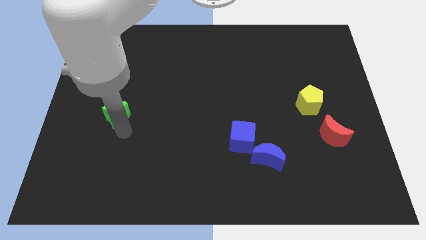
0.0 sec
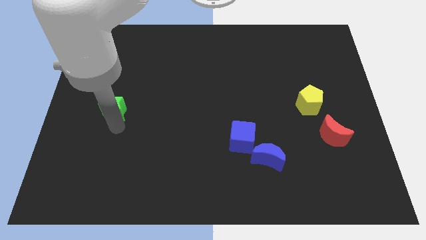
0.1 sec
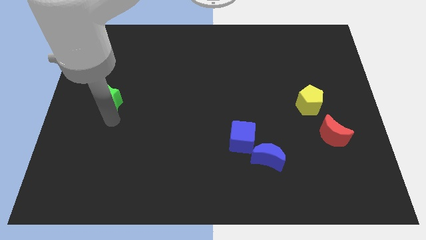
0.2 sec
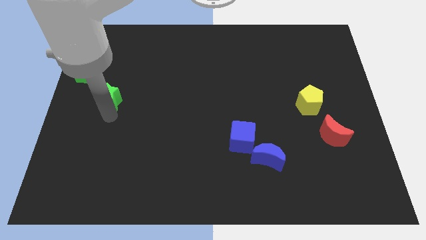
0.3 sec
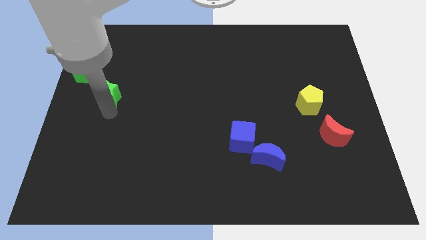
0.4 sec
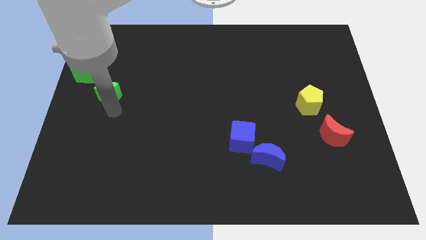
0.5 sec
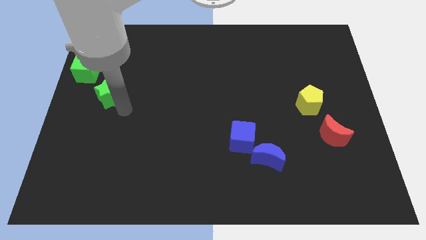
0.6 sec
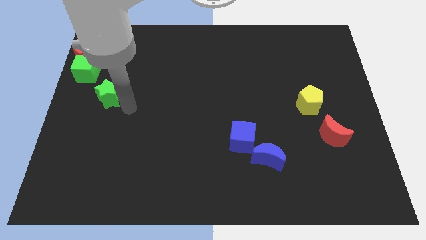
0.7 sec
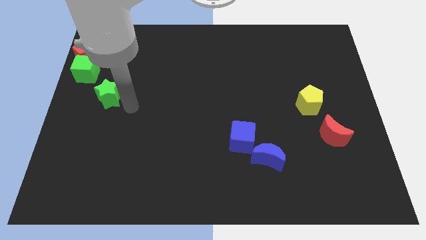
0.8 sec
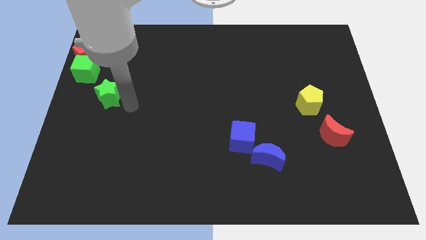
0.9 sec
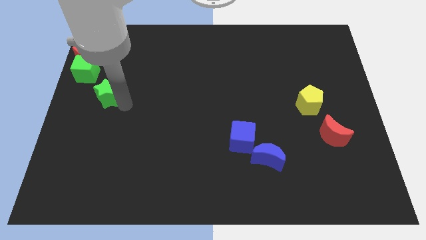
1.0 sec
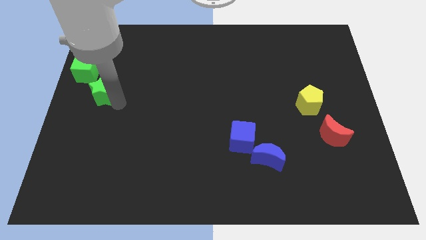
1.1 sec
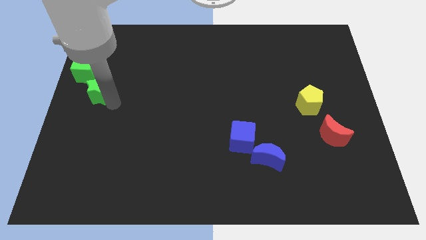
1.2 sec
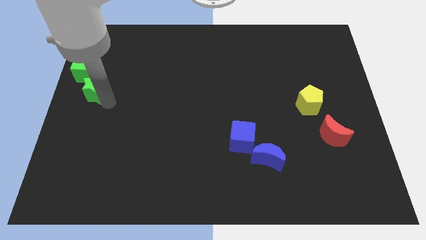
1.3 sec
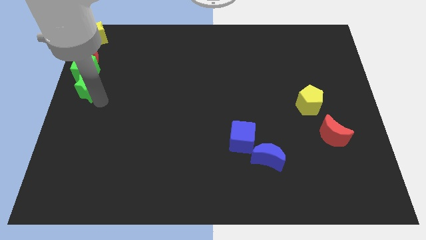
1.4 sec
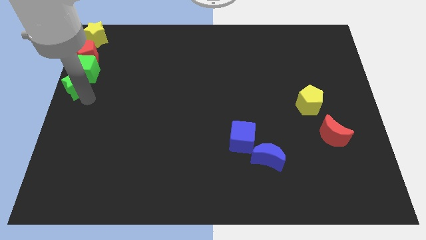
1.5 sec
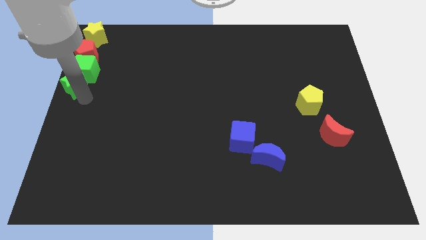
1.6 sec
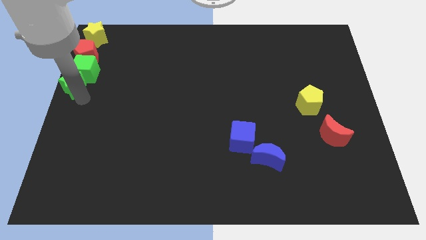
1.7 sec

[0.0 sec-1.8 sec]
push the green star to the bottom of the green cube

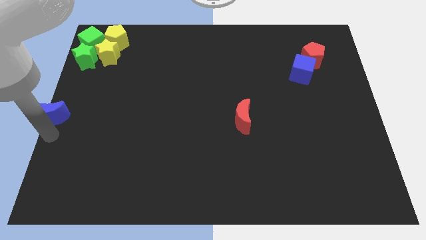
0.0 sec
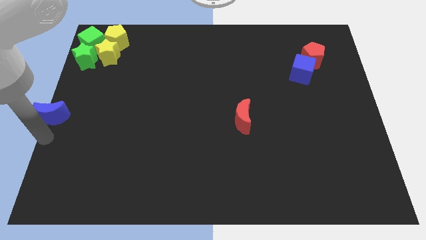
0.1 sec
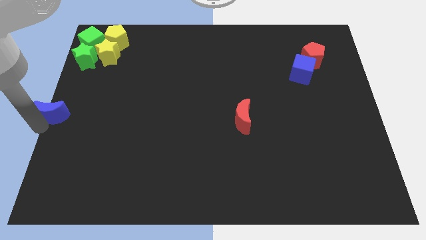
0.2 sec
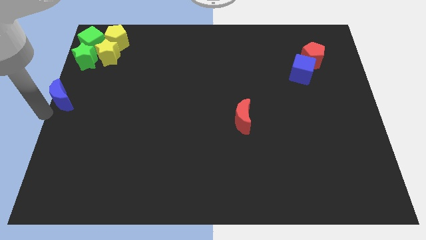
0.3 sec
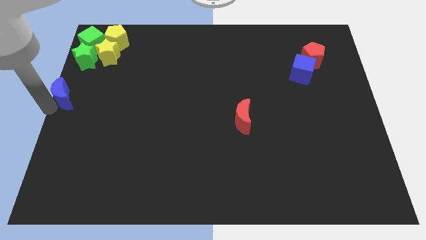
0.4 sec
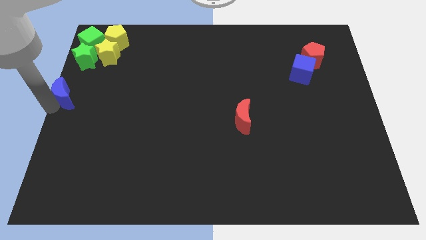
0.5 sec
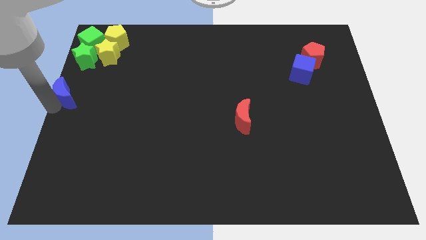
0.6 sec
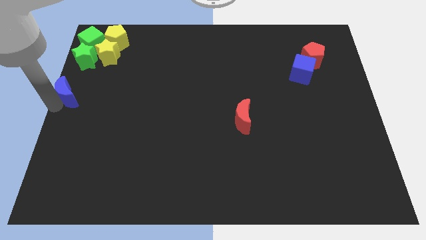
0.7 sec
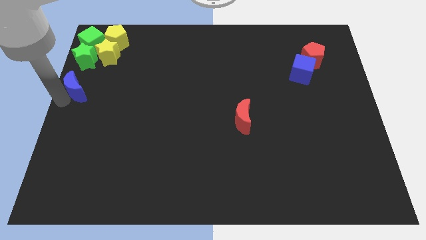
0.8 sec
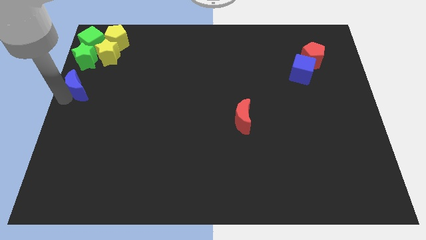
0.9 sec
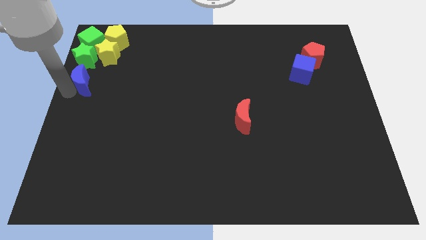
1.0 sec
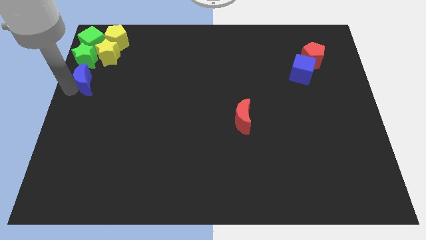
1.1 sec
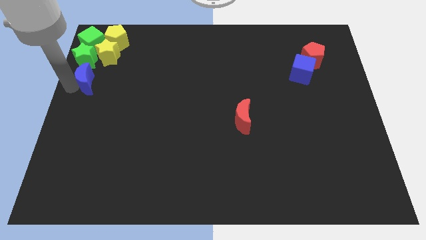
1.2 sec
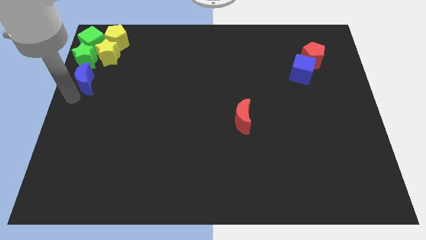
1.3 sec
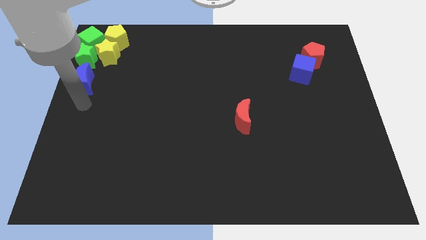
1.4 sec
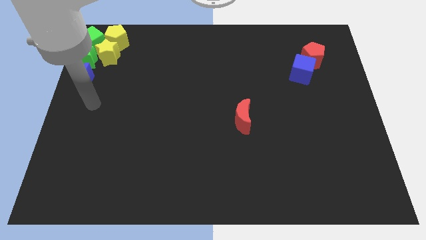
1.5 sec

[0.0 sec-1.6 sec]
push the blue crescent close to the group of blocks at the top left corner of the board

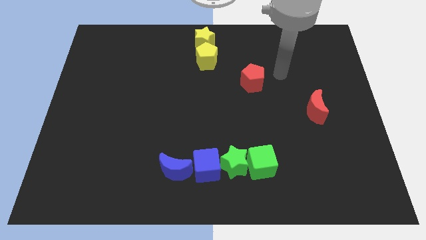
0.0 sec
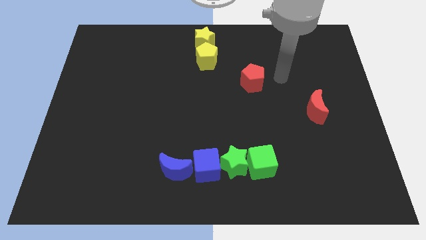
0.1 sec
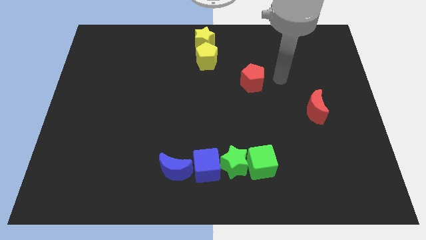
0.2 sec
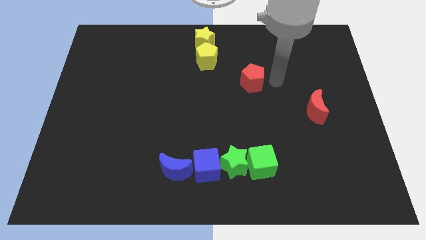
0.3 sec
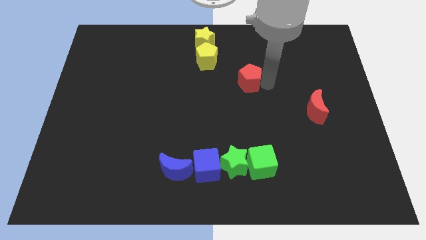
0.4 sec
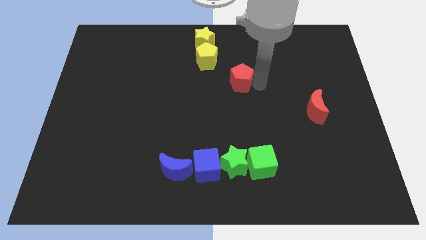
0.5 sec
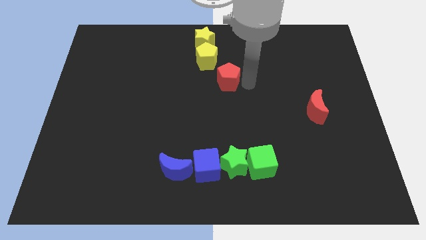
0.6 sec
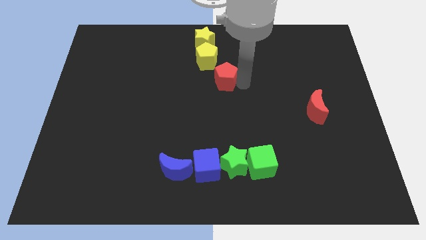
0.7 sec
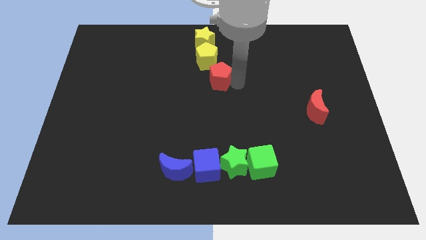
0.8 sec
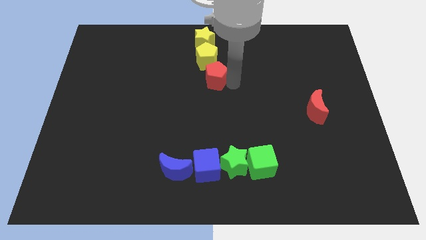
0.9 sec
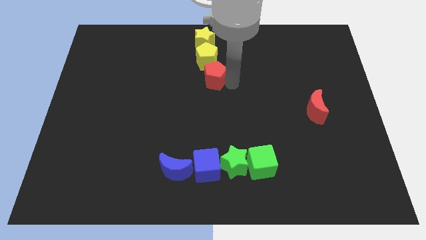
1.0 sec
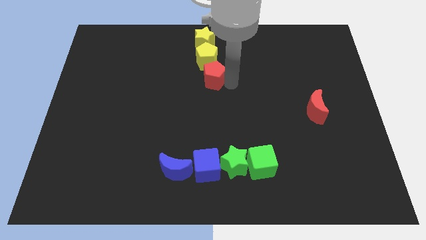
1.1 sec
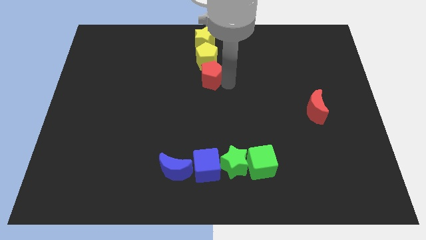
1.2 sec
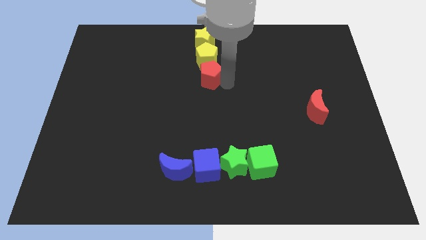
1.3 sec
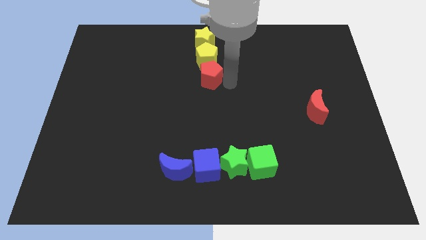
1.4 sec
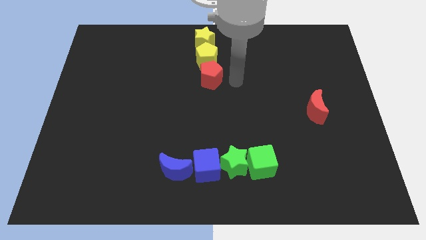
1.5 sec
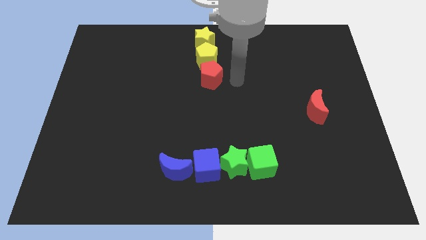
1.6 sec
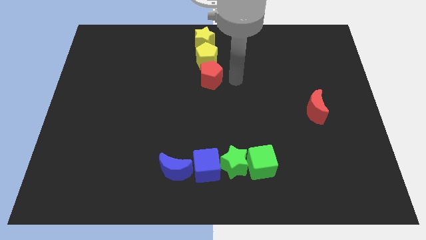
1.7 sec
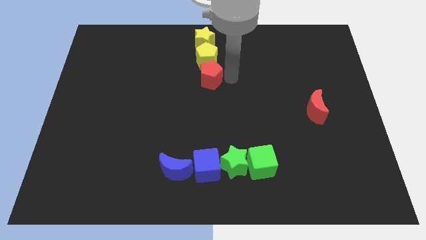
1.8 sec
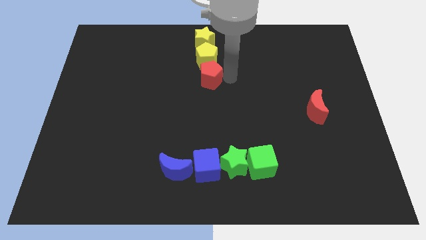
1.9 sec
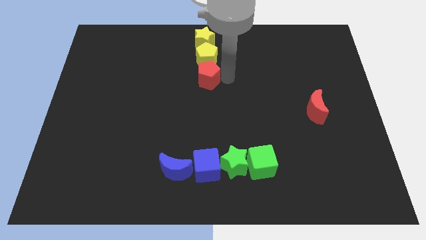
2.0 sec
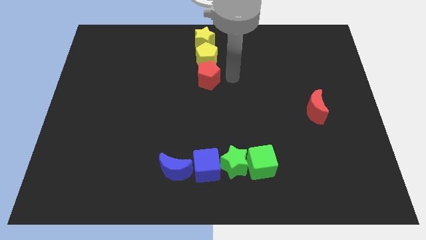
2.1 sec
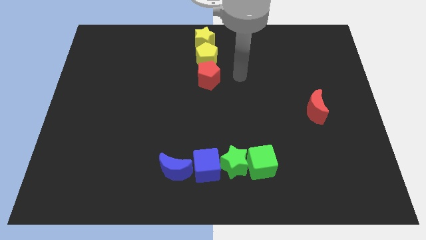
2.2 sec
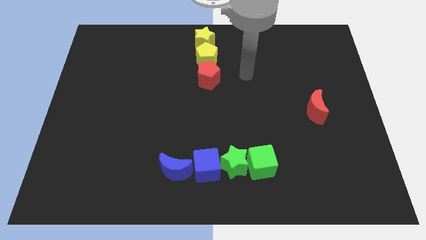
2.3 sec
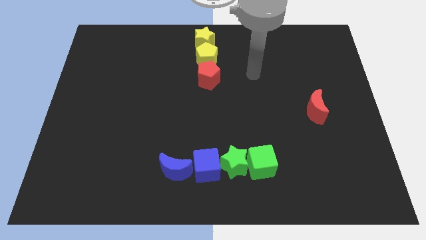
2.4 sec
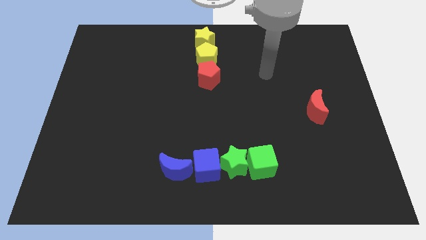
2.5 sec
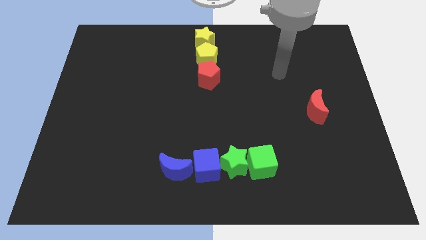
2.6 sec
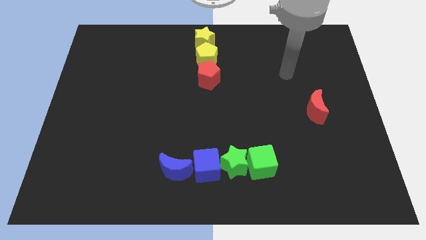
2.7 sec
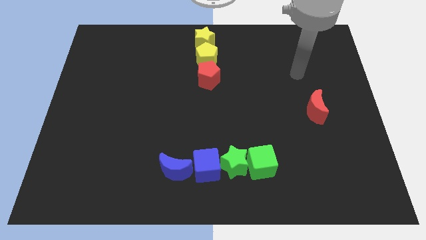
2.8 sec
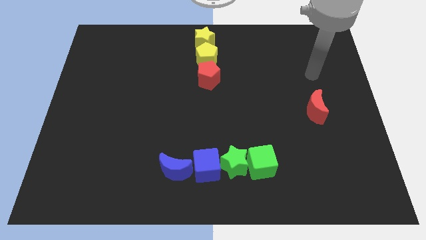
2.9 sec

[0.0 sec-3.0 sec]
move the red pentagon underneath the yellow pentagon

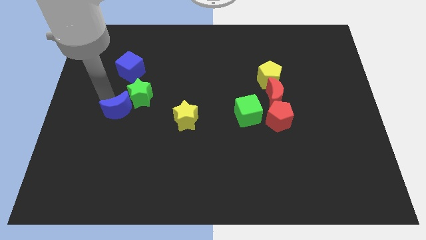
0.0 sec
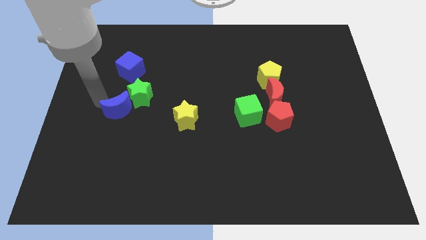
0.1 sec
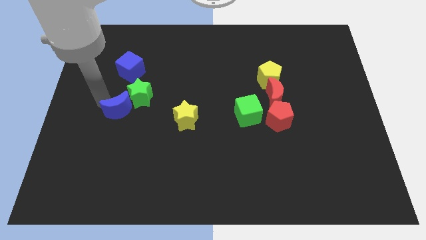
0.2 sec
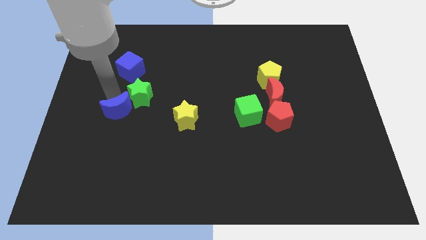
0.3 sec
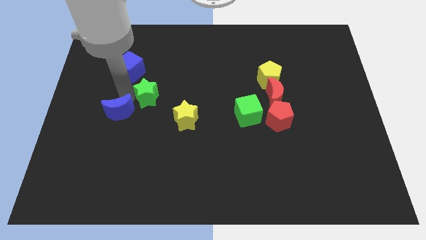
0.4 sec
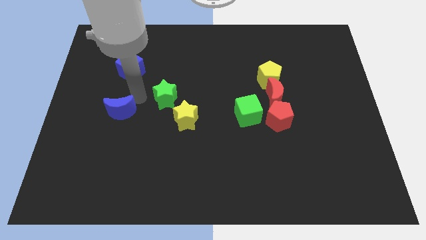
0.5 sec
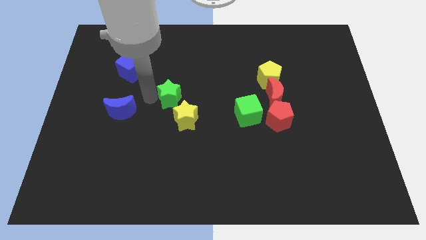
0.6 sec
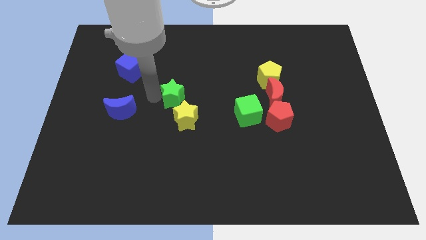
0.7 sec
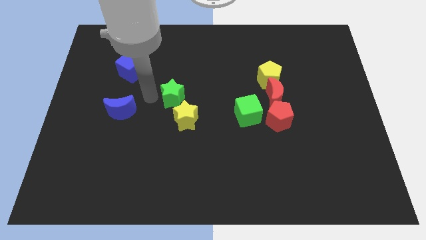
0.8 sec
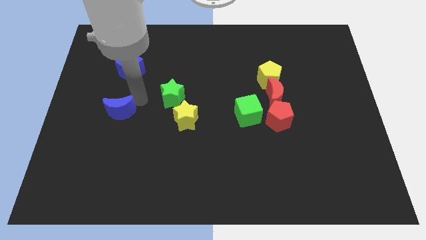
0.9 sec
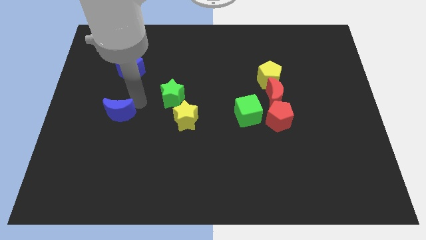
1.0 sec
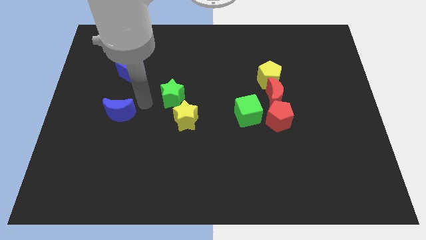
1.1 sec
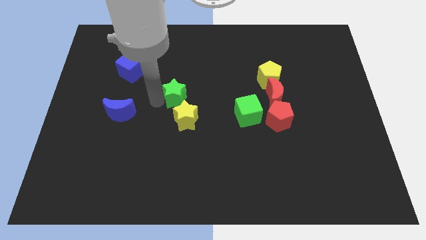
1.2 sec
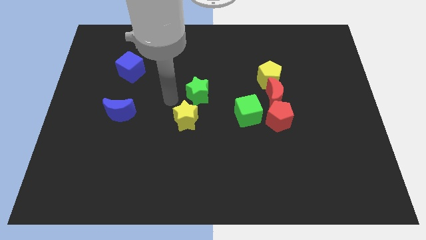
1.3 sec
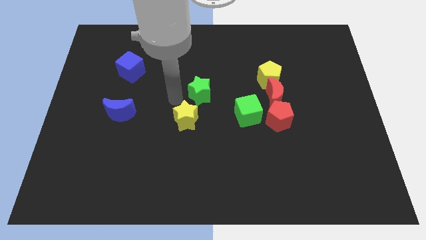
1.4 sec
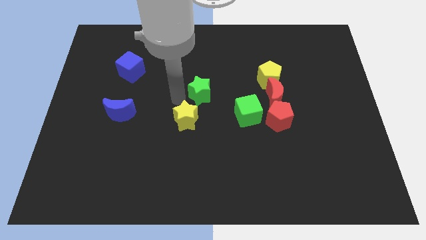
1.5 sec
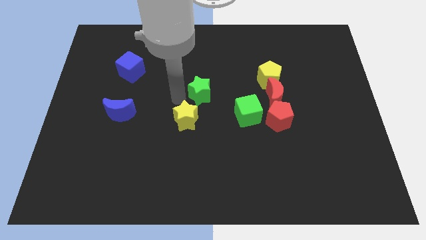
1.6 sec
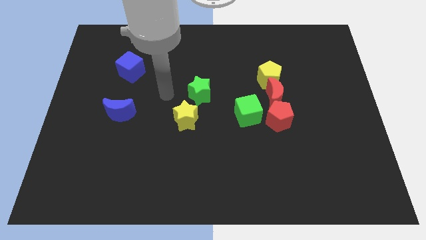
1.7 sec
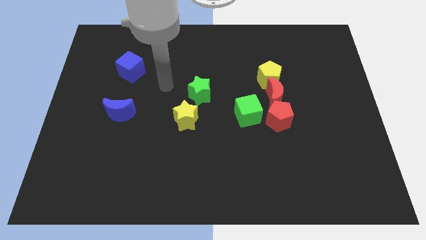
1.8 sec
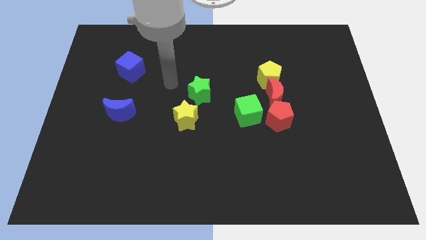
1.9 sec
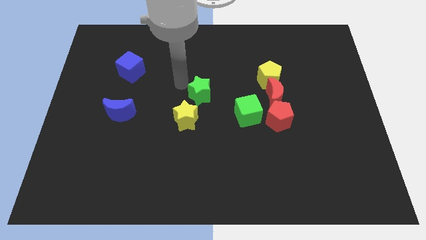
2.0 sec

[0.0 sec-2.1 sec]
separate green star and blue moon

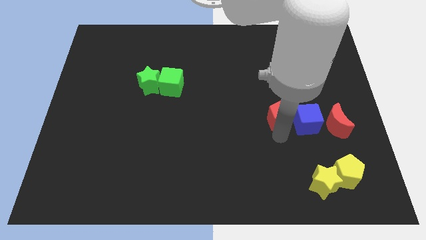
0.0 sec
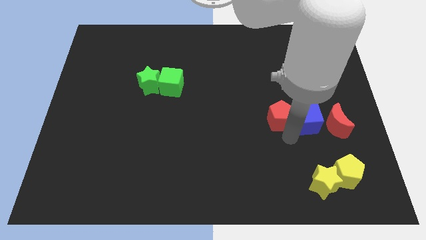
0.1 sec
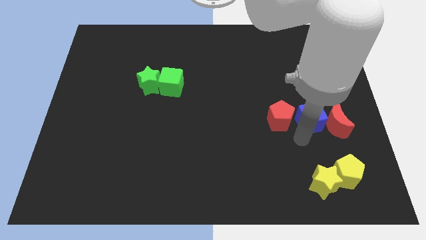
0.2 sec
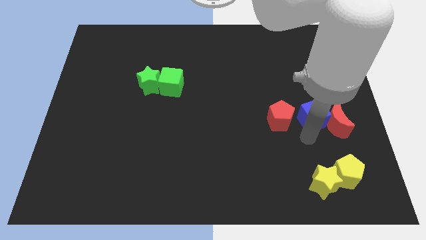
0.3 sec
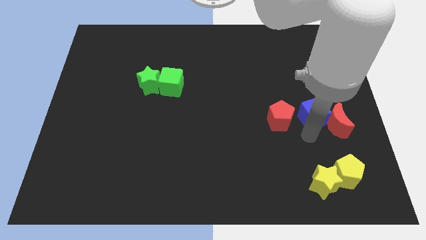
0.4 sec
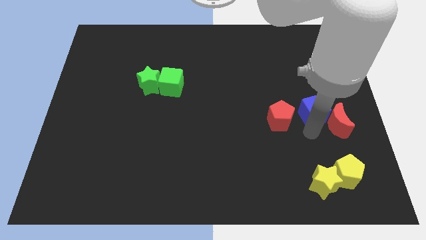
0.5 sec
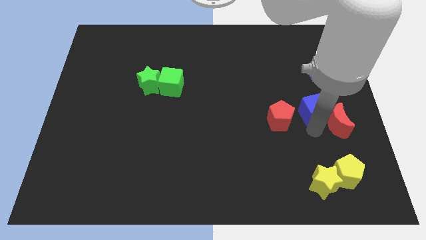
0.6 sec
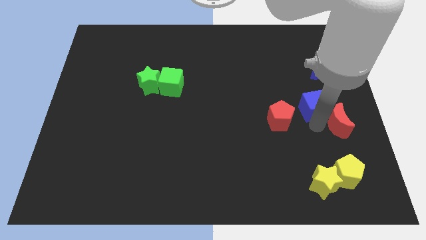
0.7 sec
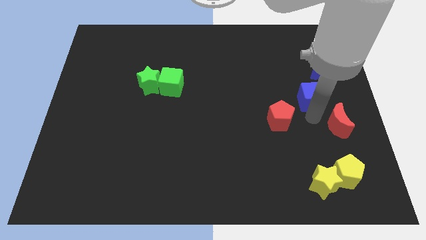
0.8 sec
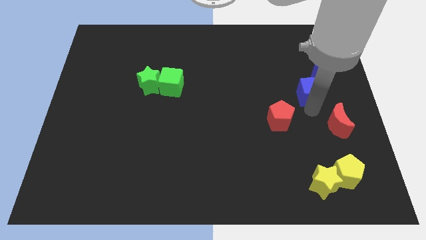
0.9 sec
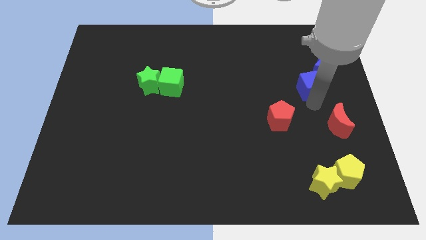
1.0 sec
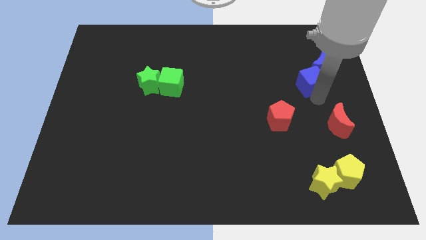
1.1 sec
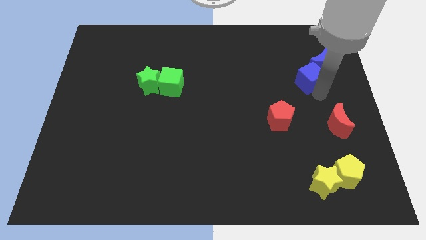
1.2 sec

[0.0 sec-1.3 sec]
push the blue cube towards the blue crescent
